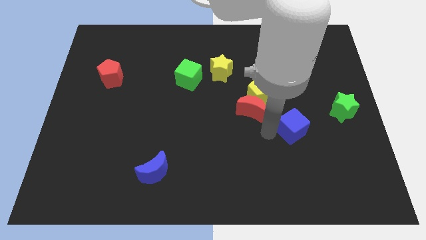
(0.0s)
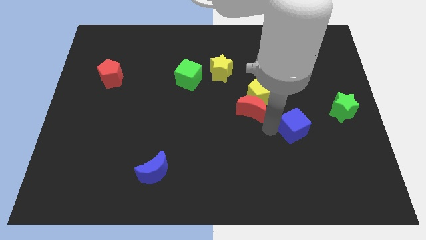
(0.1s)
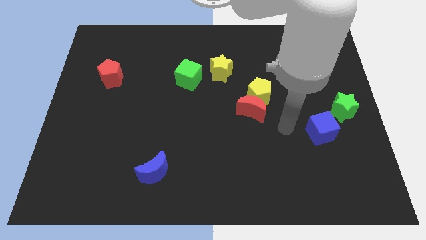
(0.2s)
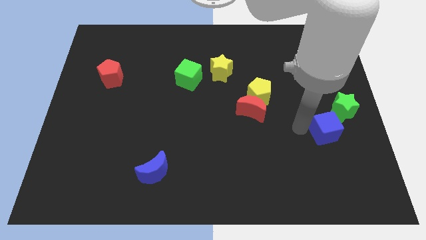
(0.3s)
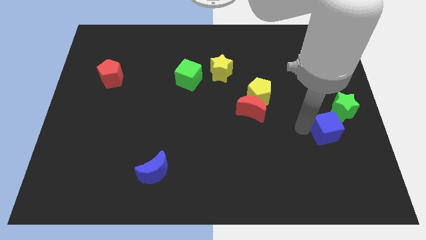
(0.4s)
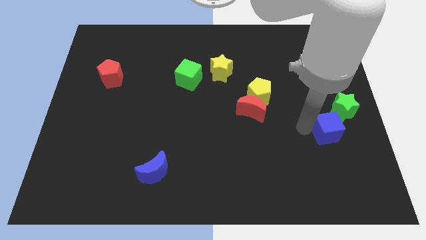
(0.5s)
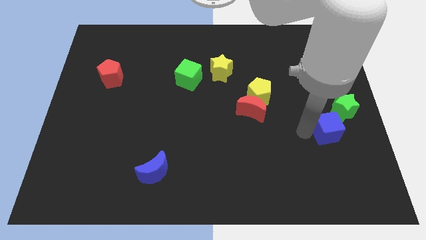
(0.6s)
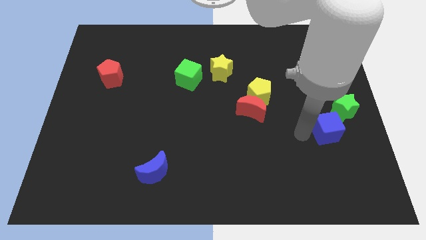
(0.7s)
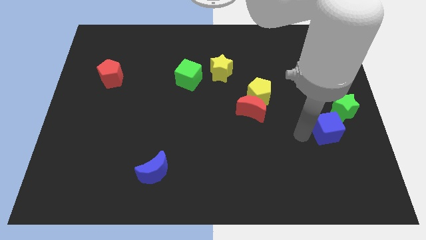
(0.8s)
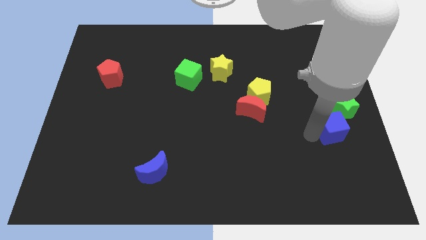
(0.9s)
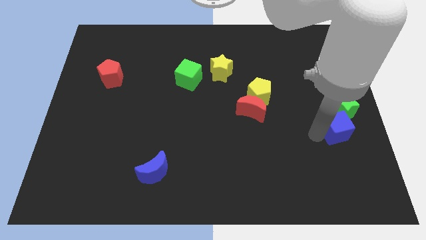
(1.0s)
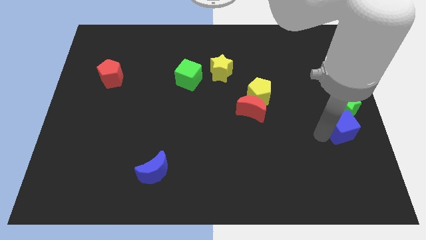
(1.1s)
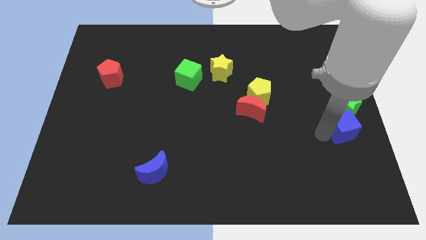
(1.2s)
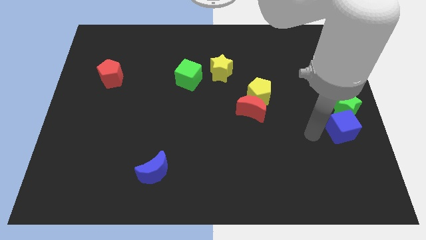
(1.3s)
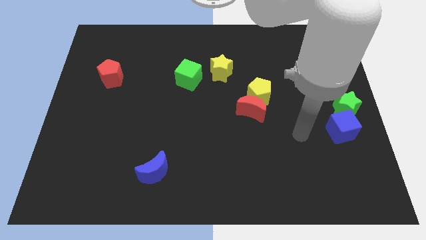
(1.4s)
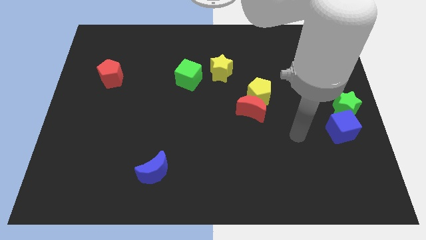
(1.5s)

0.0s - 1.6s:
push the blue cube into the green star

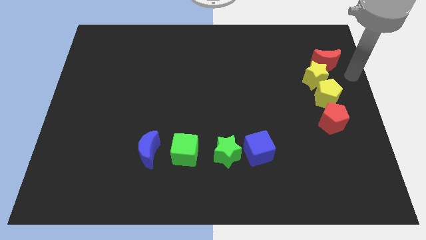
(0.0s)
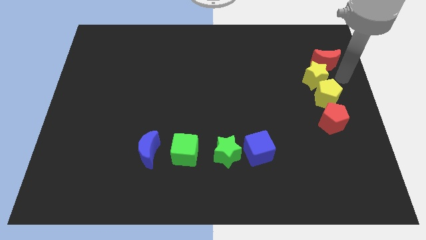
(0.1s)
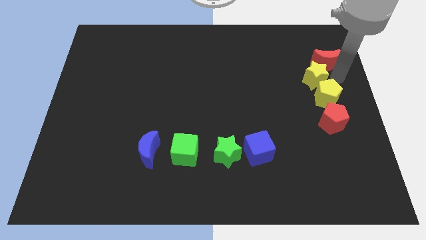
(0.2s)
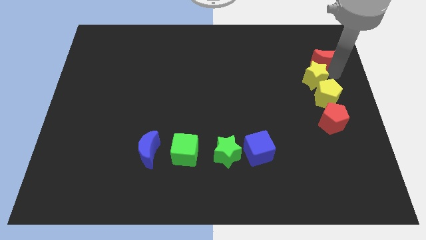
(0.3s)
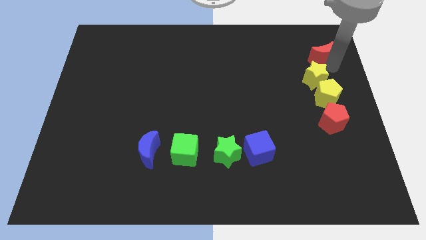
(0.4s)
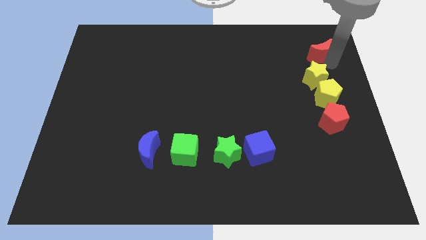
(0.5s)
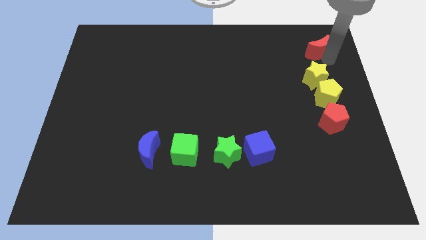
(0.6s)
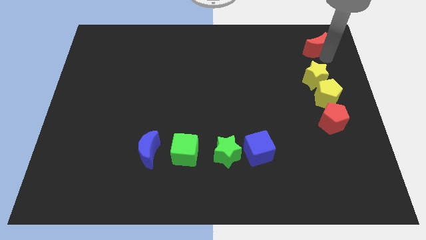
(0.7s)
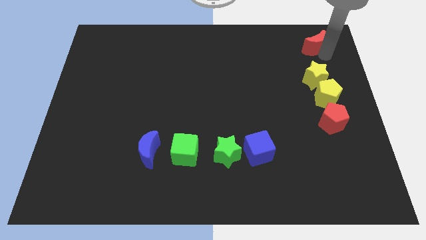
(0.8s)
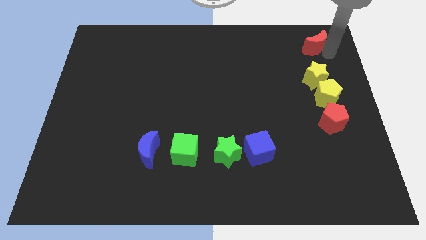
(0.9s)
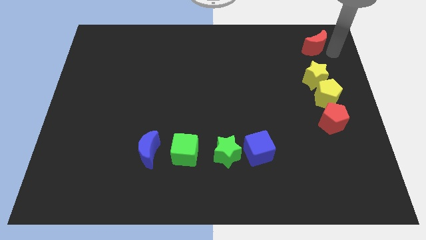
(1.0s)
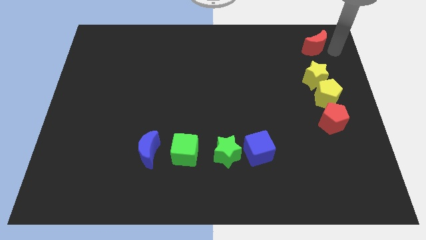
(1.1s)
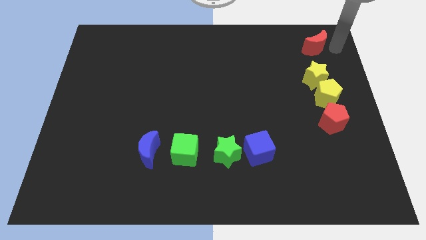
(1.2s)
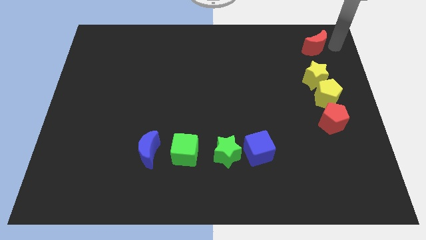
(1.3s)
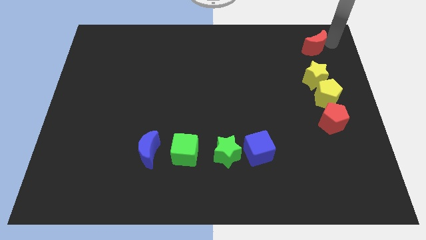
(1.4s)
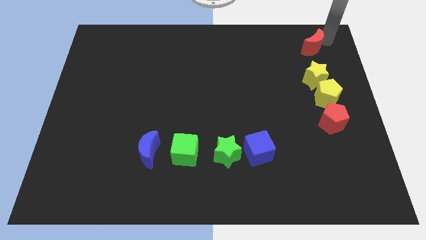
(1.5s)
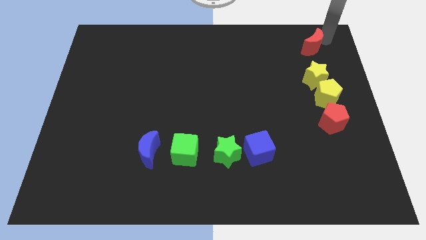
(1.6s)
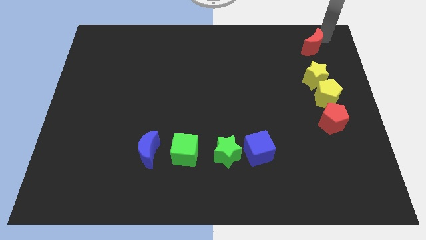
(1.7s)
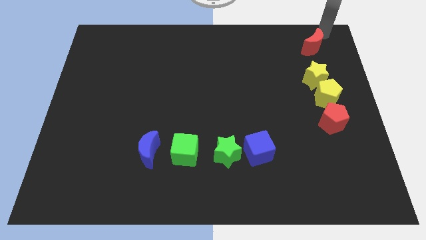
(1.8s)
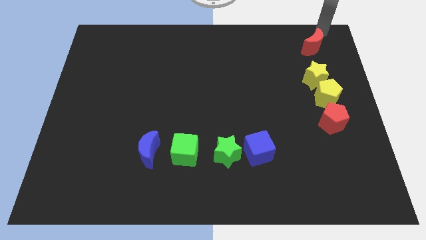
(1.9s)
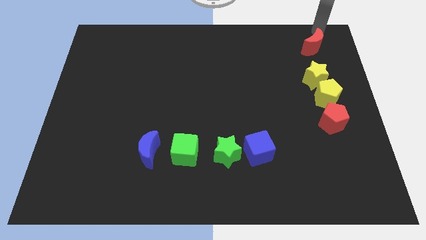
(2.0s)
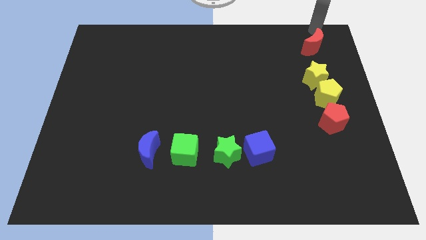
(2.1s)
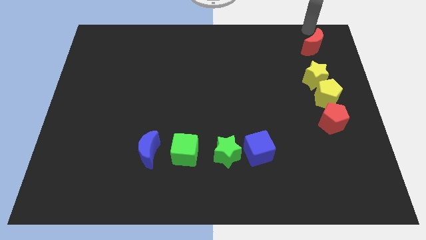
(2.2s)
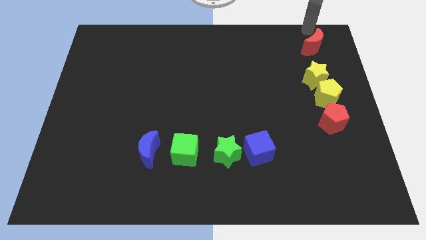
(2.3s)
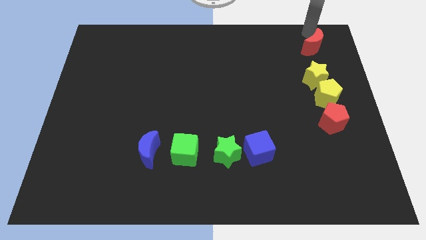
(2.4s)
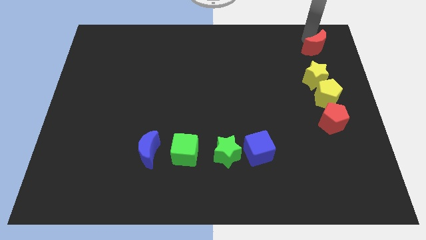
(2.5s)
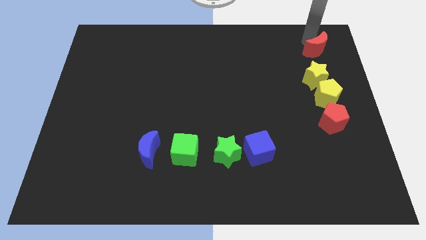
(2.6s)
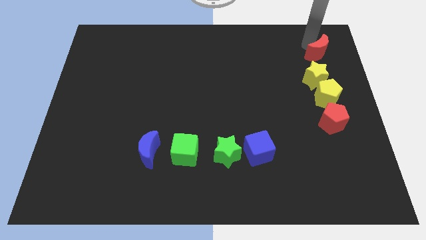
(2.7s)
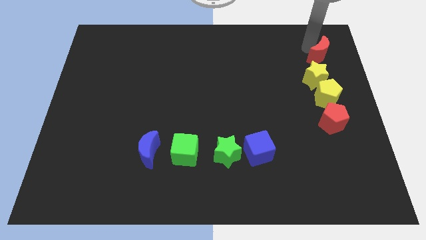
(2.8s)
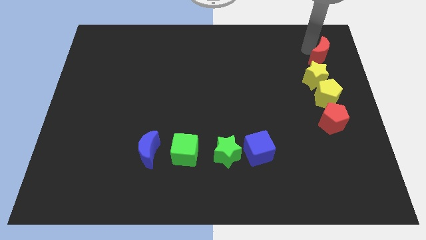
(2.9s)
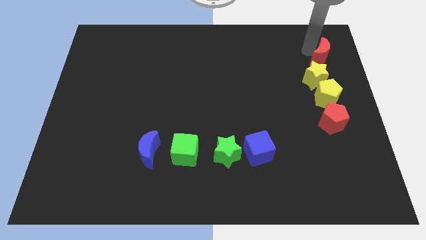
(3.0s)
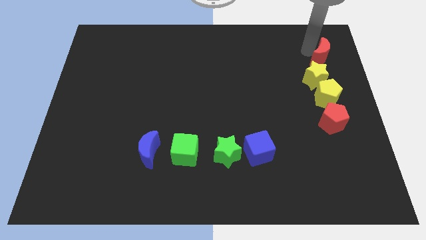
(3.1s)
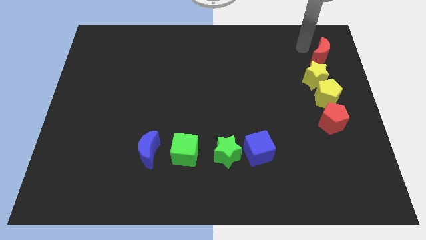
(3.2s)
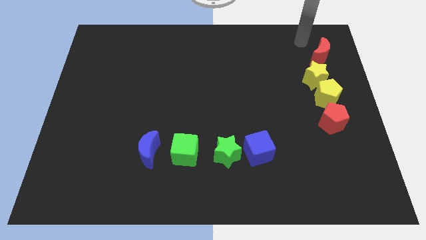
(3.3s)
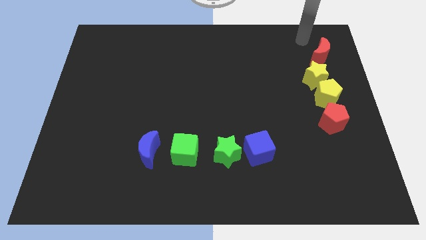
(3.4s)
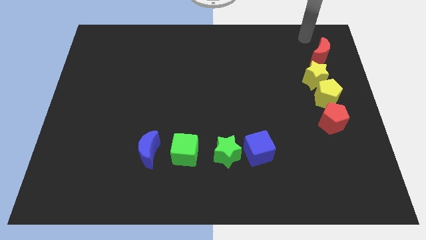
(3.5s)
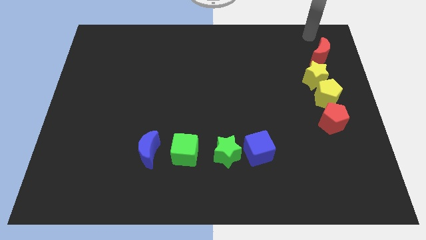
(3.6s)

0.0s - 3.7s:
push the red moon towards the yellow star

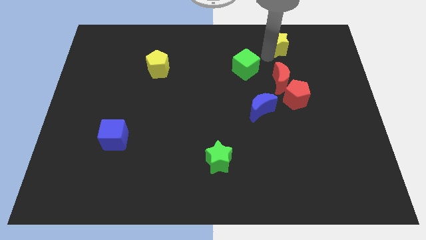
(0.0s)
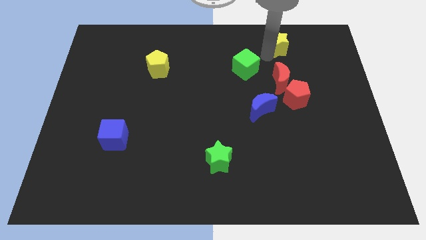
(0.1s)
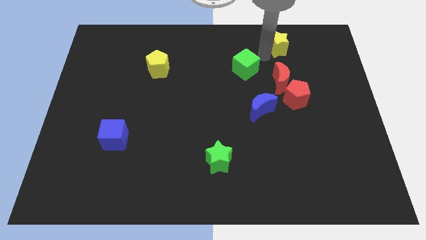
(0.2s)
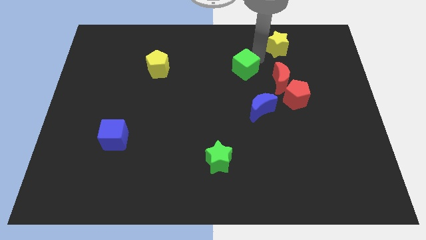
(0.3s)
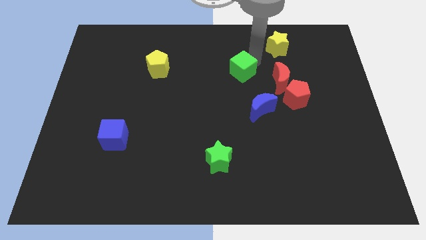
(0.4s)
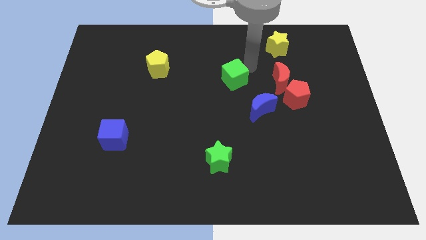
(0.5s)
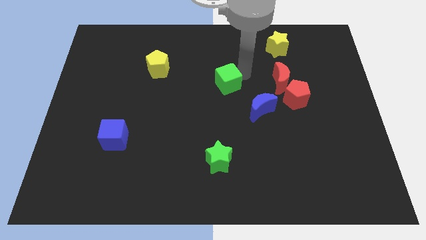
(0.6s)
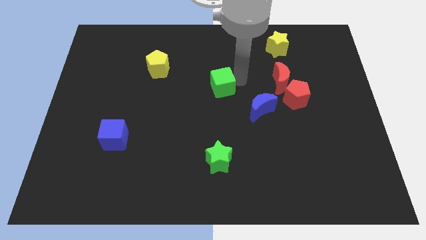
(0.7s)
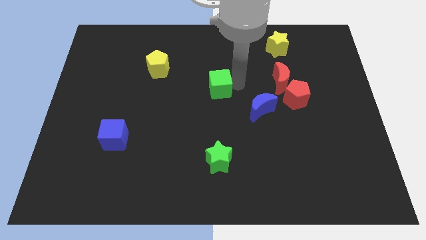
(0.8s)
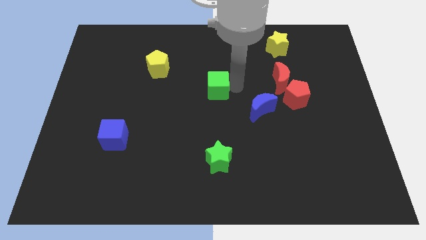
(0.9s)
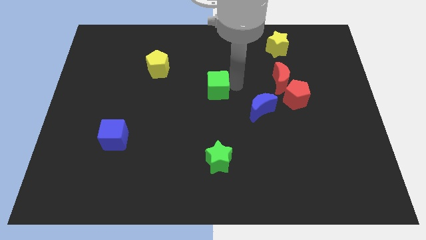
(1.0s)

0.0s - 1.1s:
place the green cube in between the yellow pentagon and blue moon

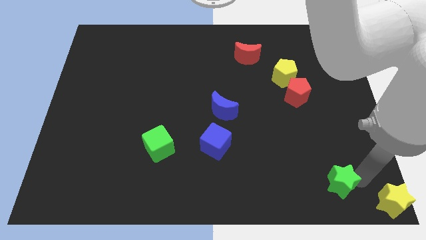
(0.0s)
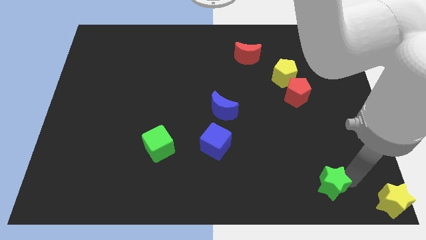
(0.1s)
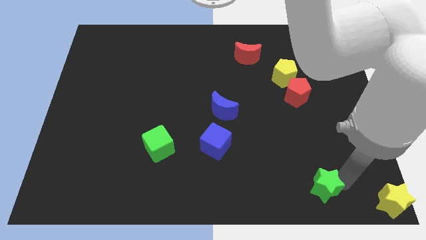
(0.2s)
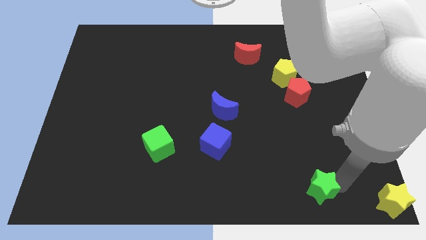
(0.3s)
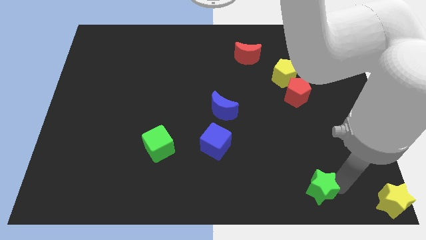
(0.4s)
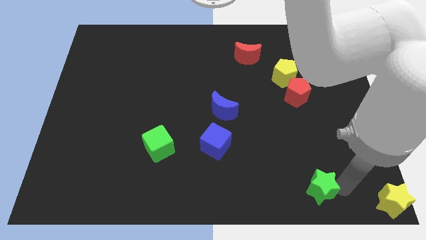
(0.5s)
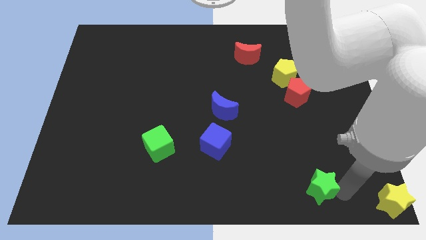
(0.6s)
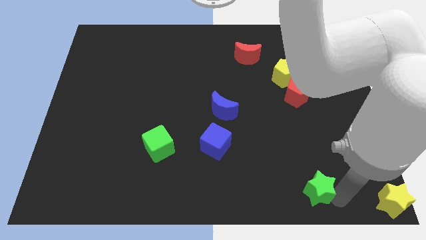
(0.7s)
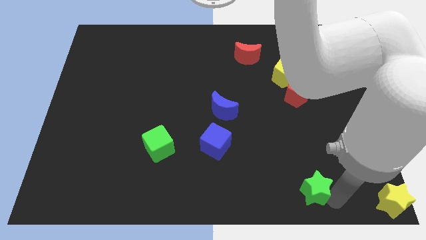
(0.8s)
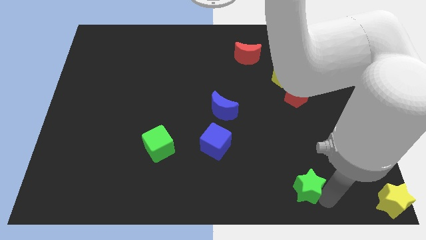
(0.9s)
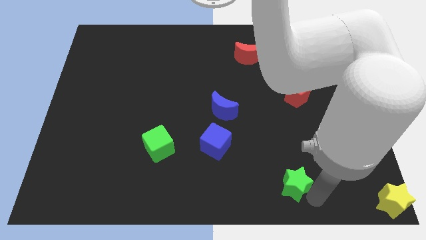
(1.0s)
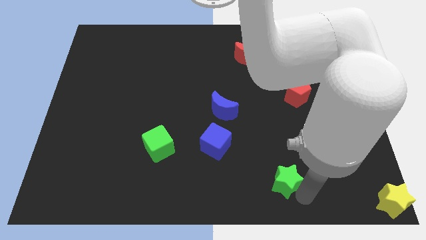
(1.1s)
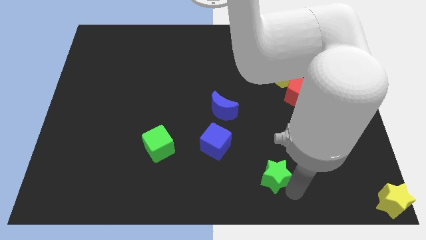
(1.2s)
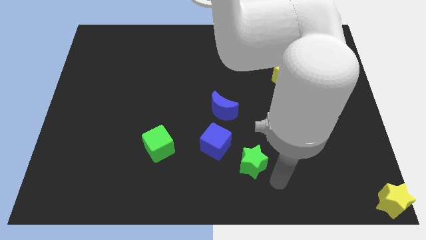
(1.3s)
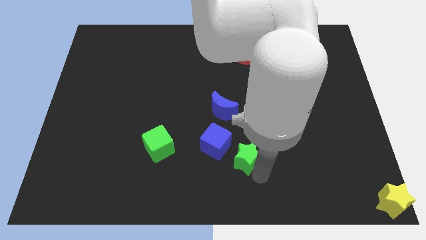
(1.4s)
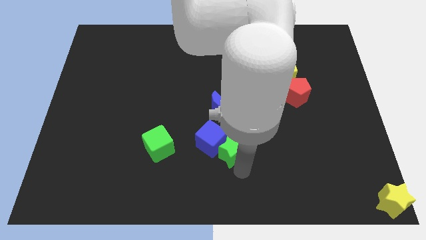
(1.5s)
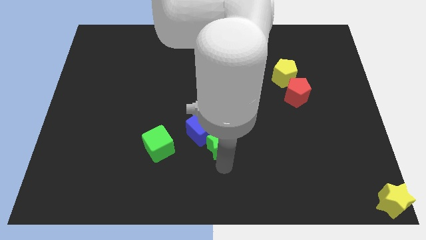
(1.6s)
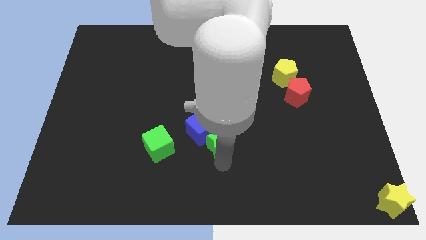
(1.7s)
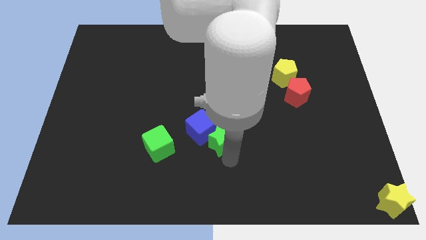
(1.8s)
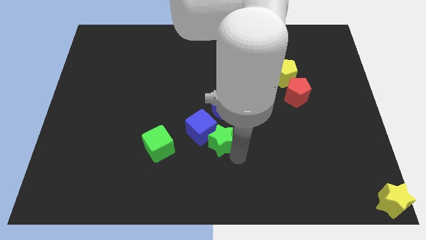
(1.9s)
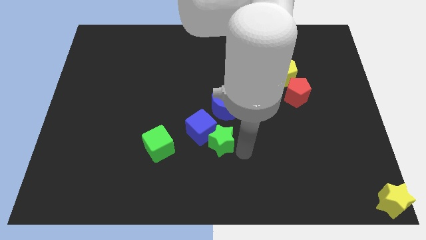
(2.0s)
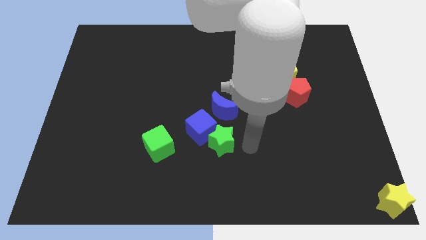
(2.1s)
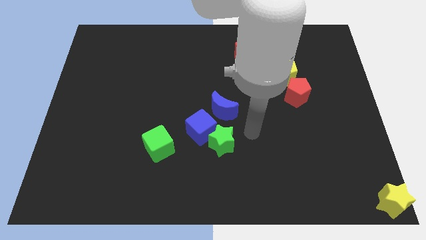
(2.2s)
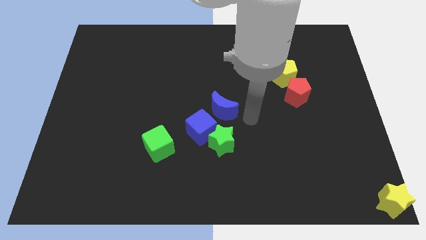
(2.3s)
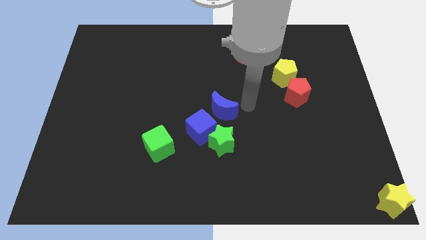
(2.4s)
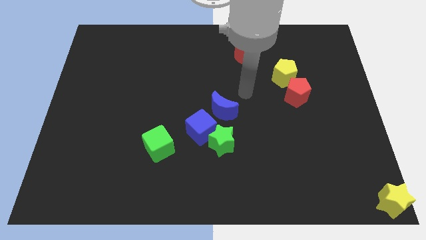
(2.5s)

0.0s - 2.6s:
push the green star towards the blue cube

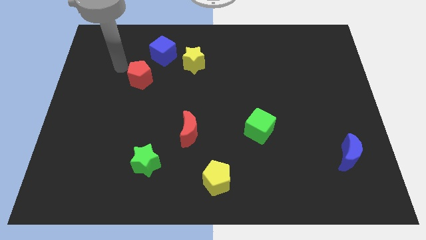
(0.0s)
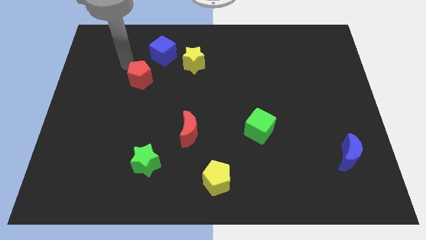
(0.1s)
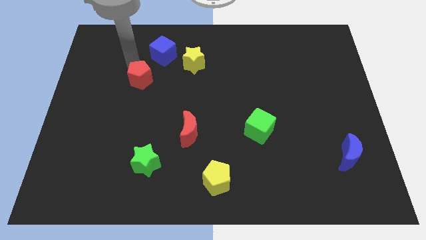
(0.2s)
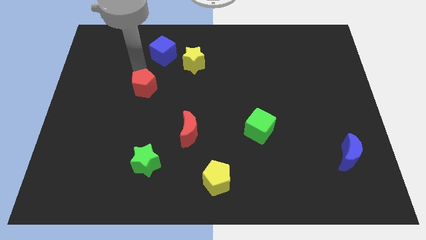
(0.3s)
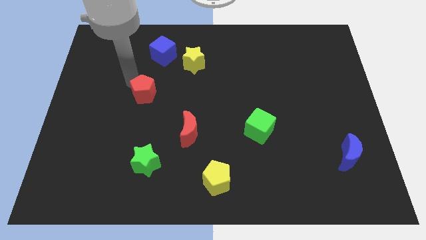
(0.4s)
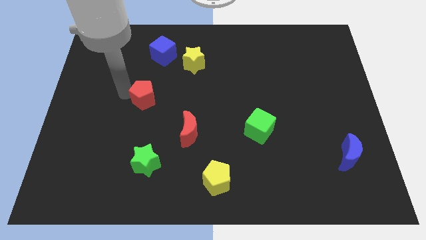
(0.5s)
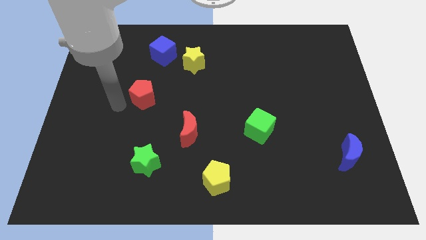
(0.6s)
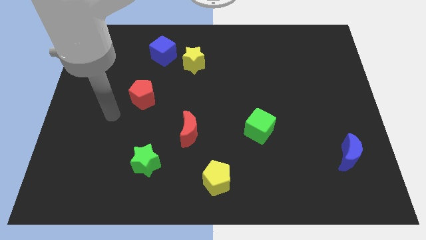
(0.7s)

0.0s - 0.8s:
push red pentagon above green star
